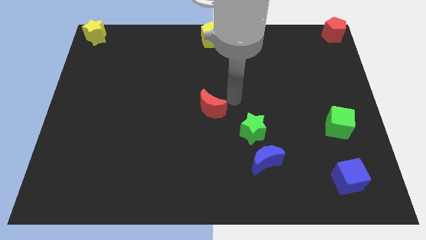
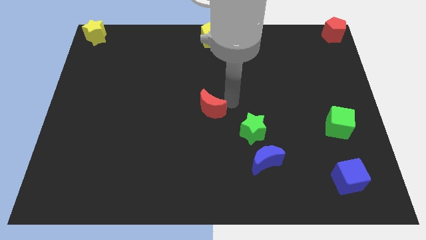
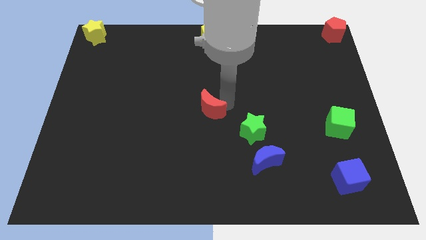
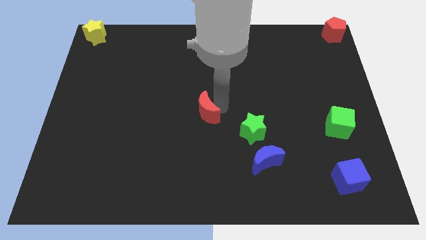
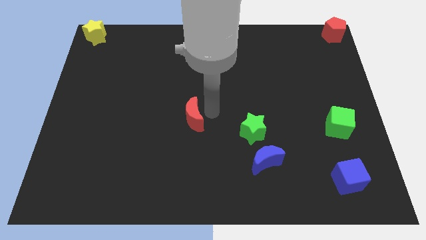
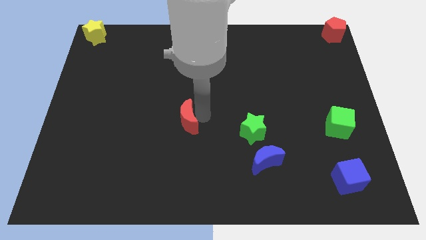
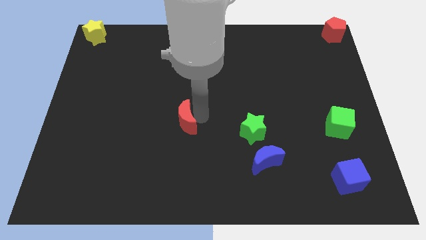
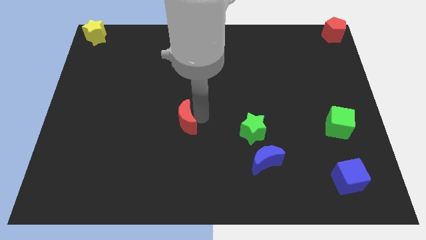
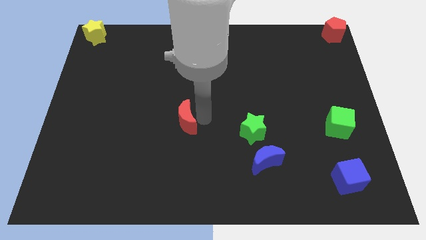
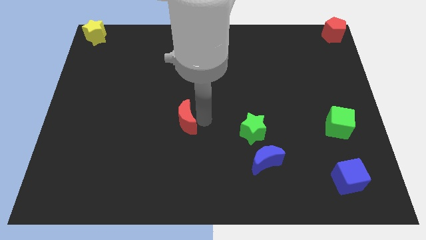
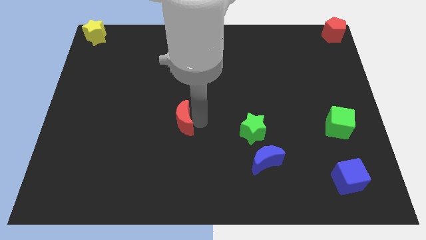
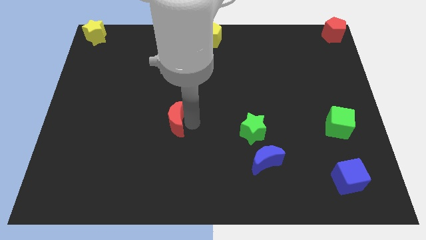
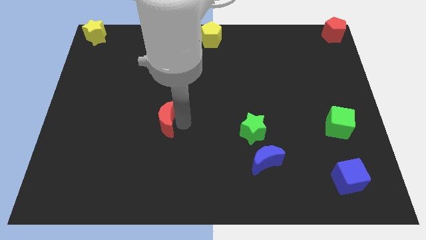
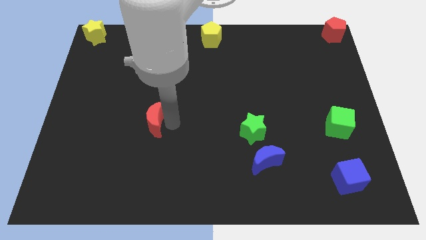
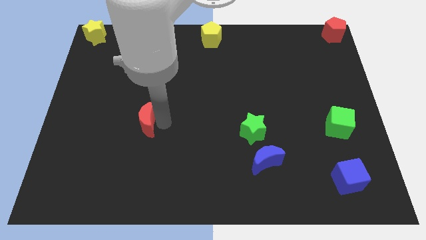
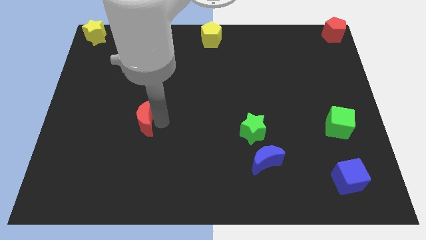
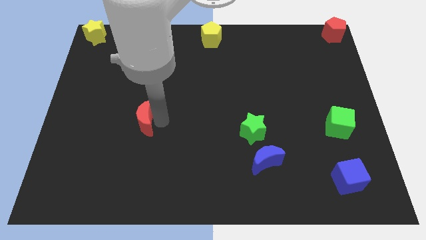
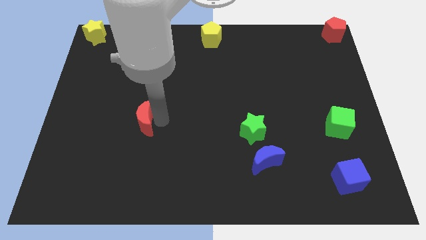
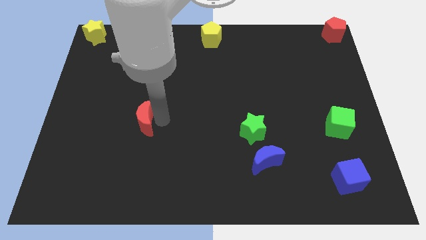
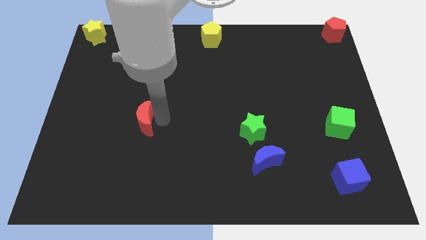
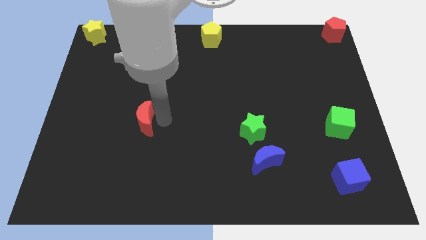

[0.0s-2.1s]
slightly push the red crescent towards the left of the board

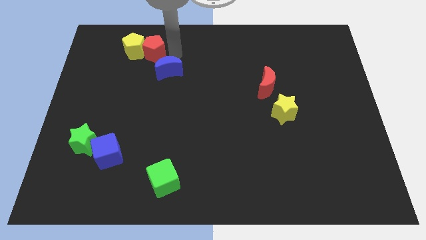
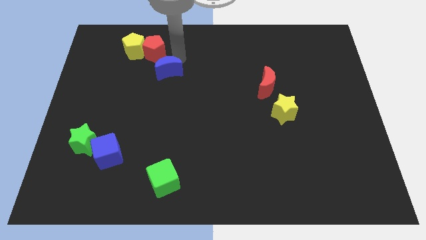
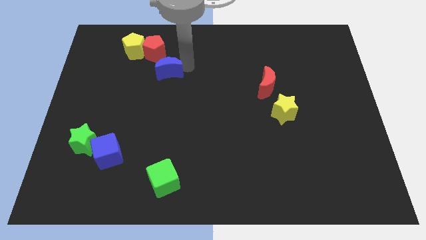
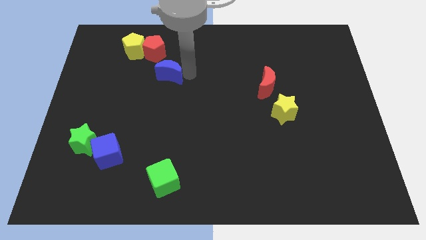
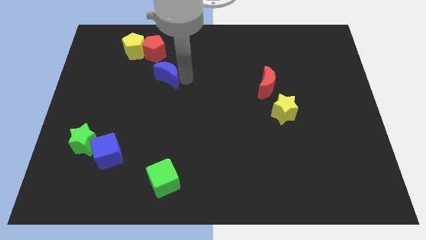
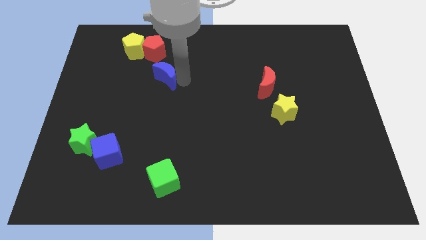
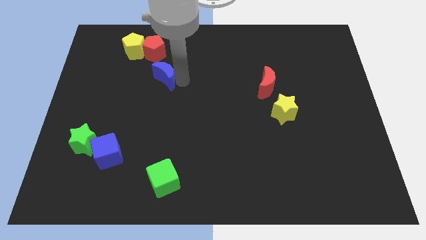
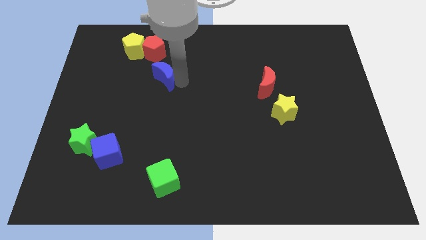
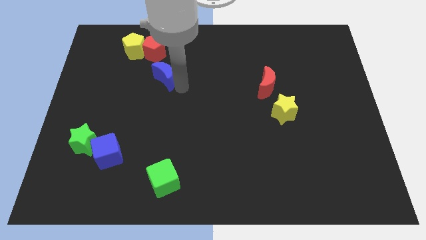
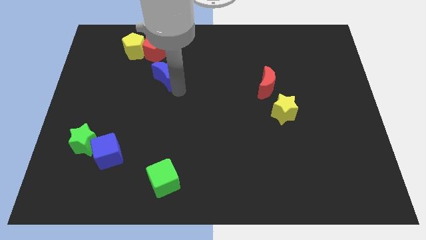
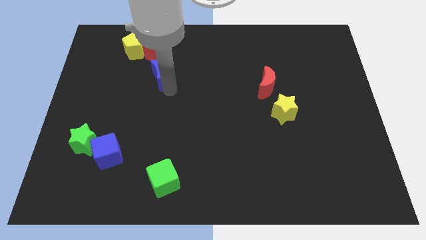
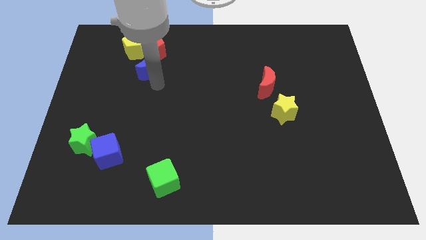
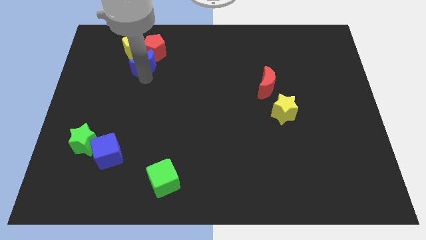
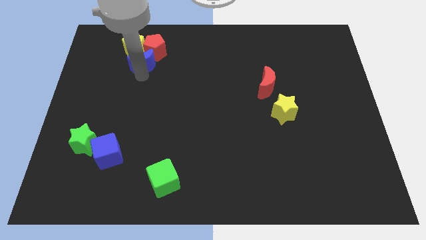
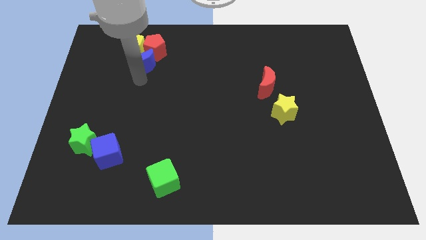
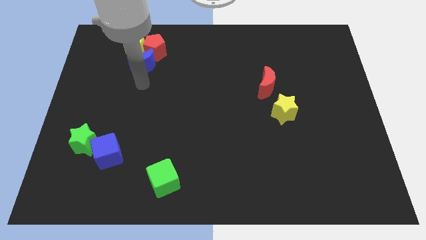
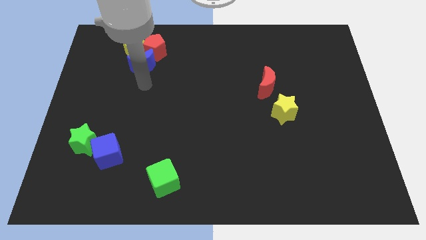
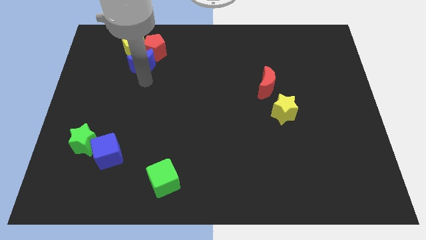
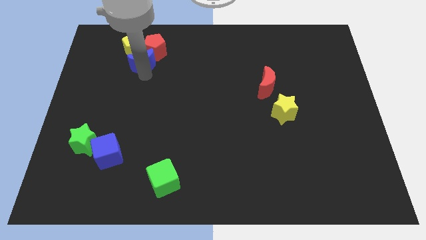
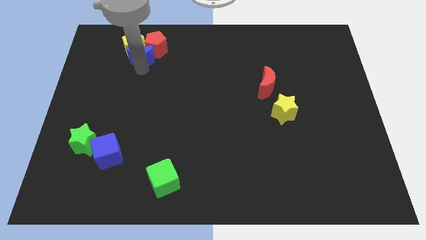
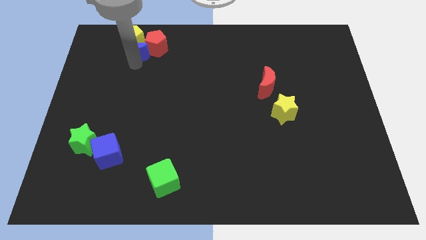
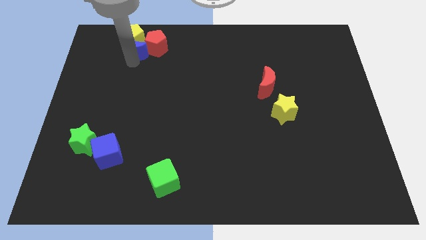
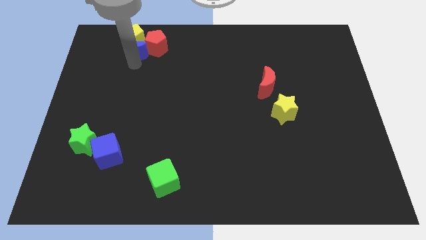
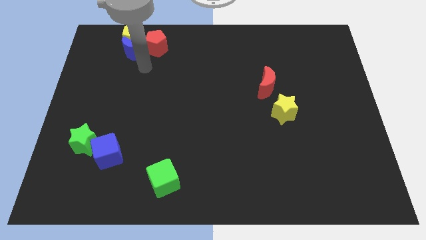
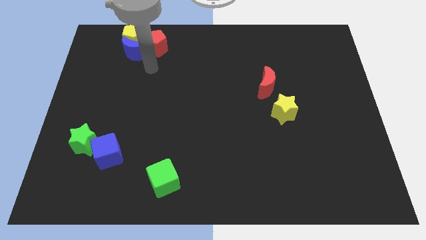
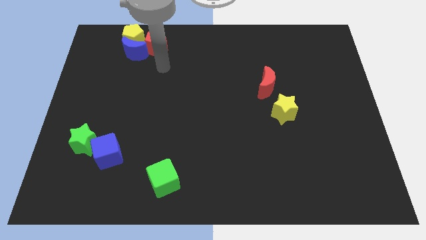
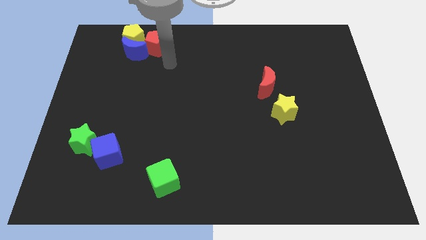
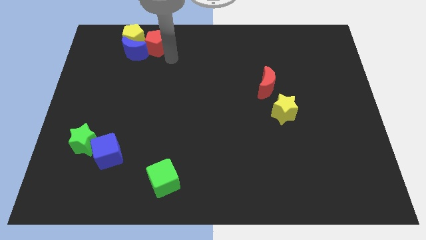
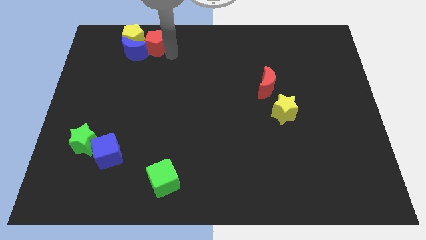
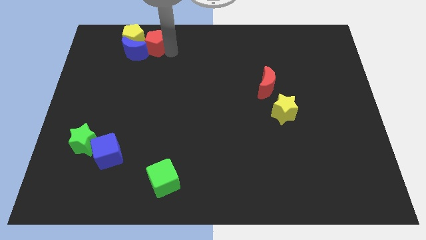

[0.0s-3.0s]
move blue moon into bottom of the red pentagon and yellow pentagon

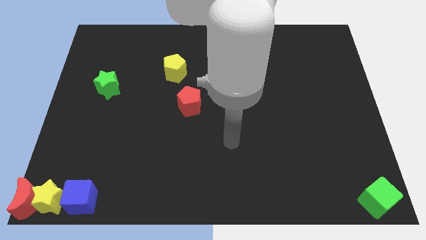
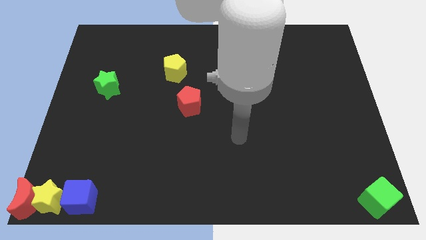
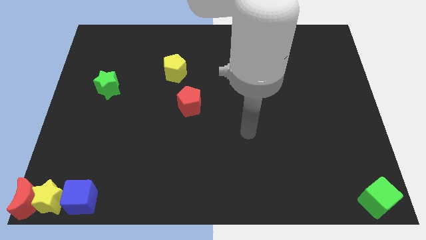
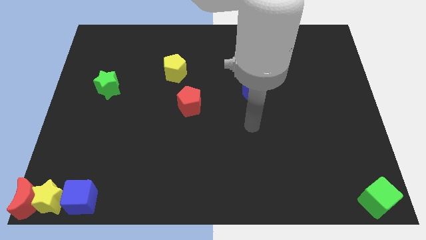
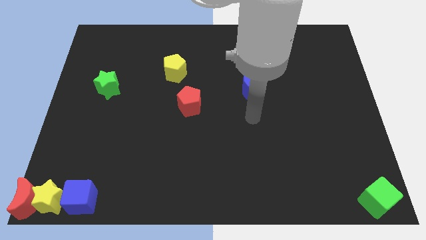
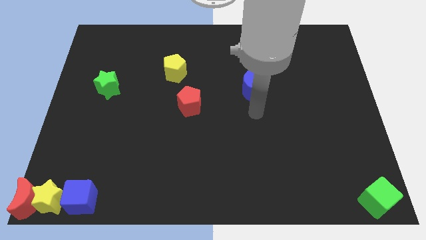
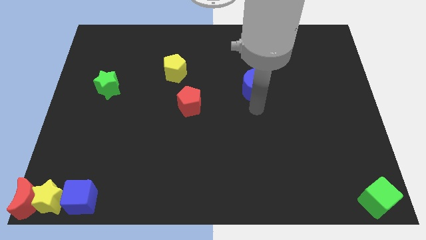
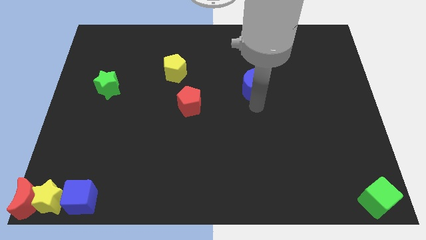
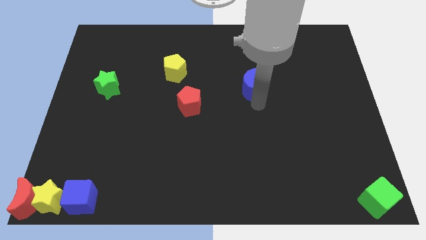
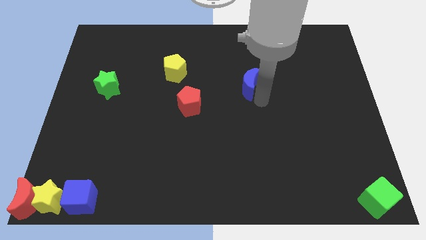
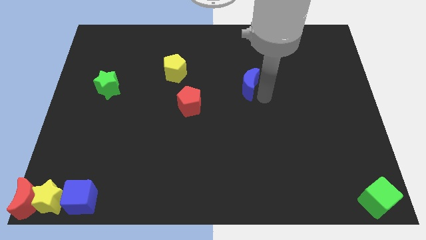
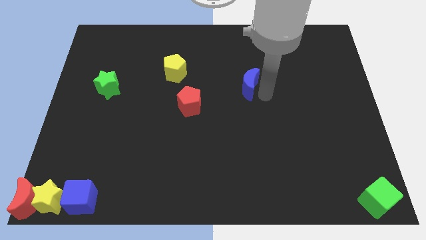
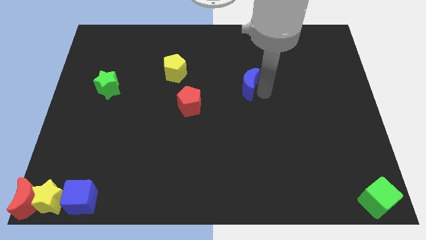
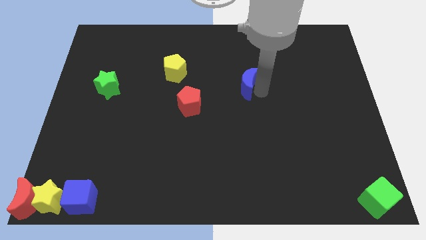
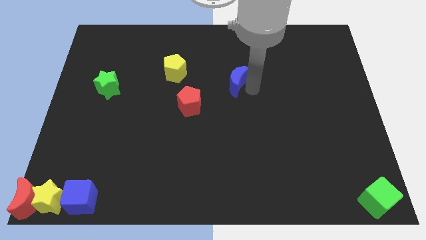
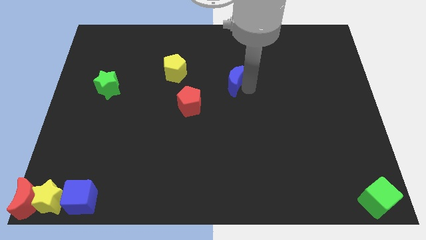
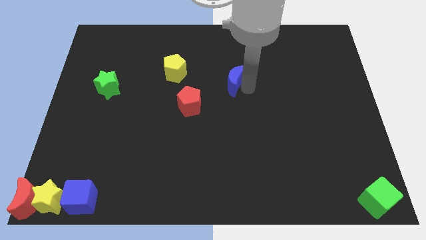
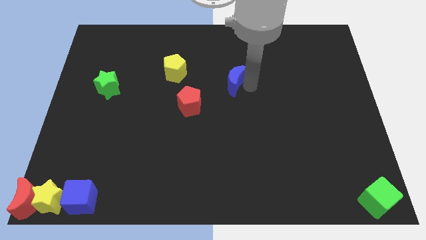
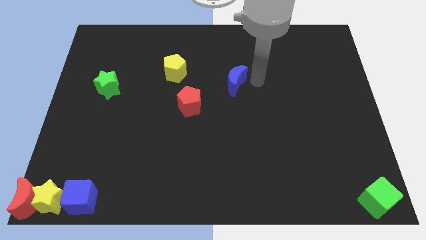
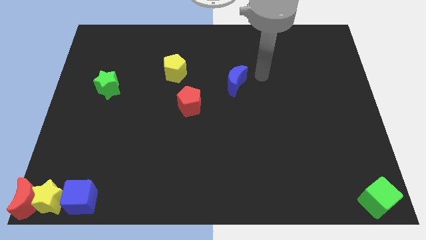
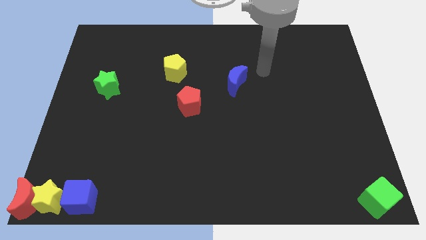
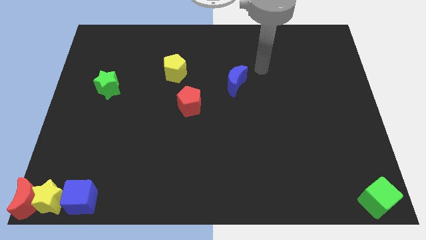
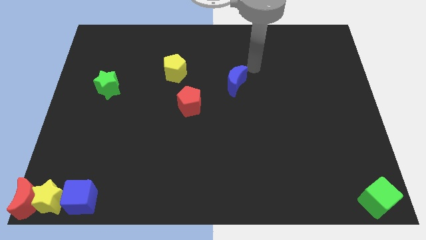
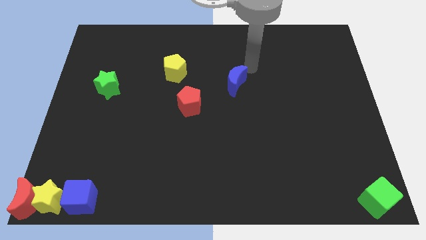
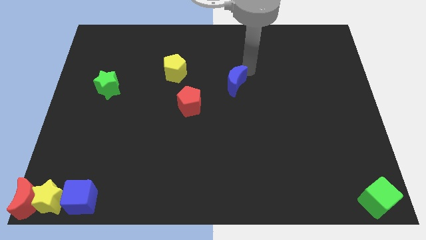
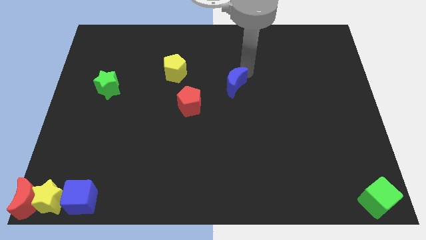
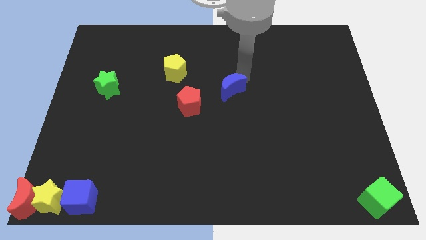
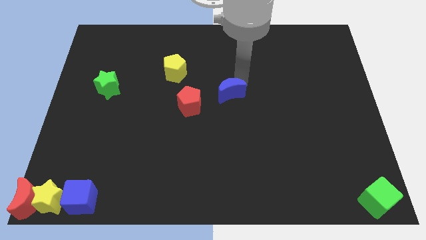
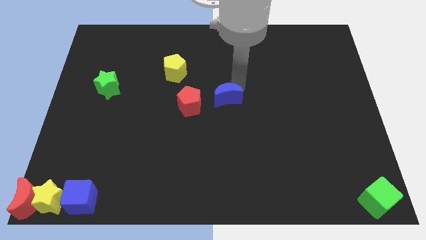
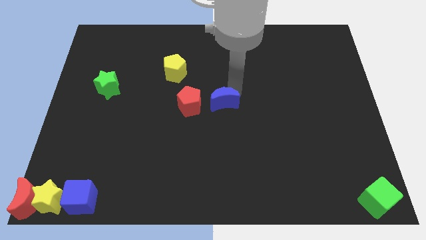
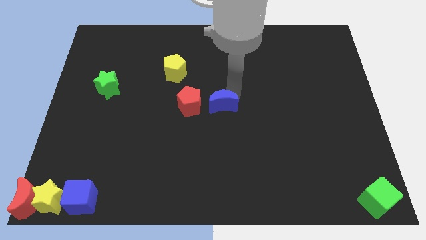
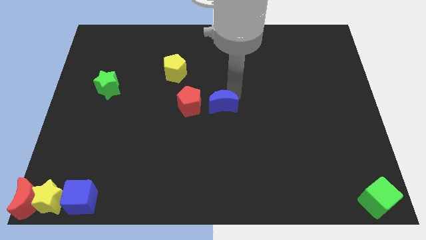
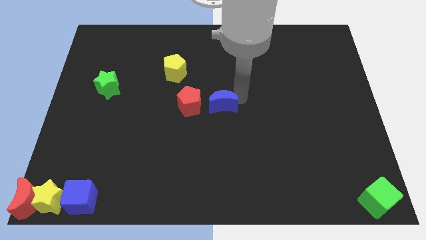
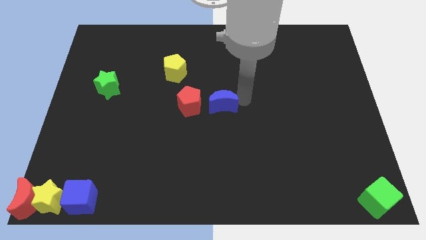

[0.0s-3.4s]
place the blue moon right to the red pentagon

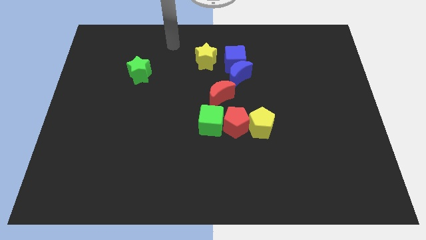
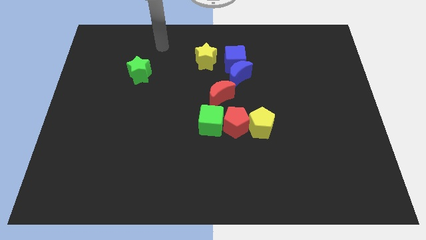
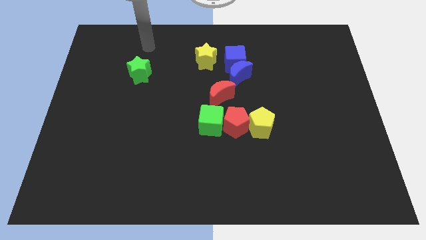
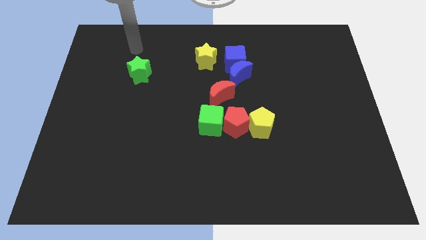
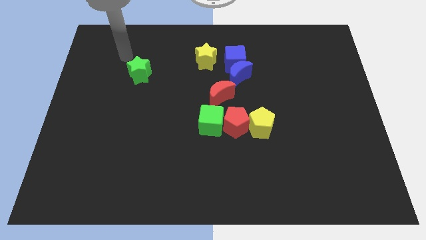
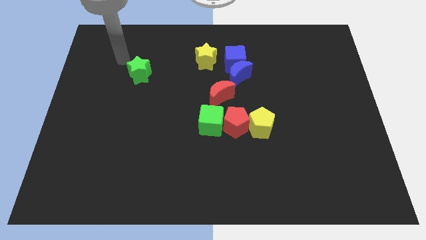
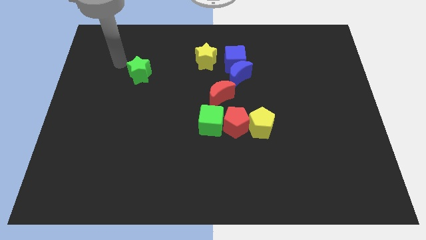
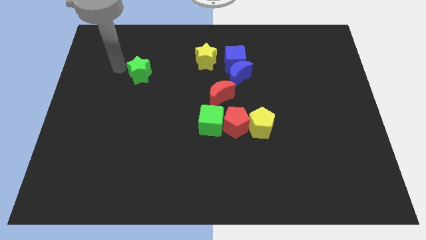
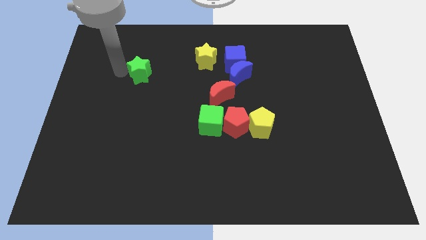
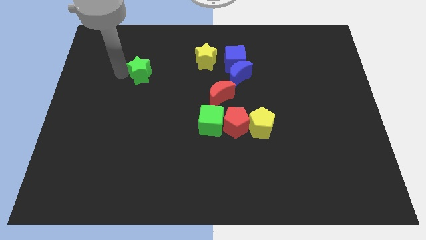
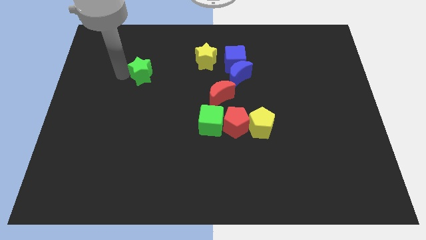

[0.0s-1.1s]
move your arm to the green star
